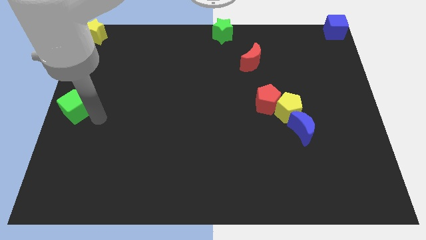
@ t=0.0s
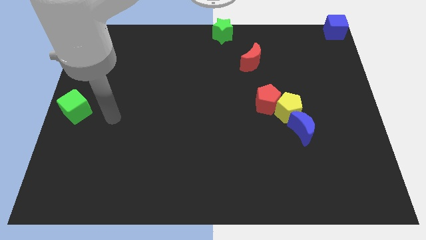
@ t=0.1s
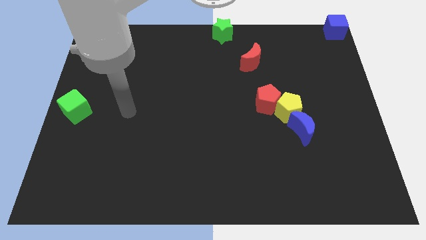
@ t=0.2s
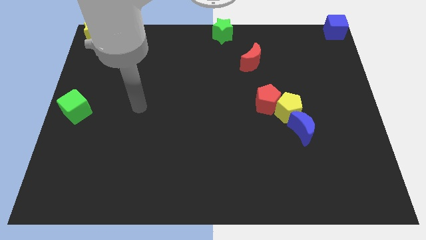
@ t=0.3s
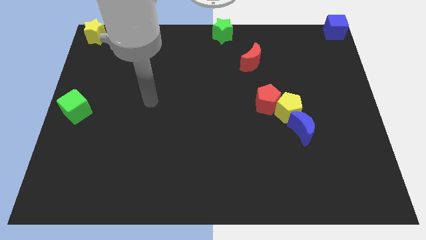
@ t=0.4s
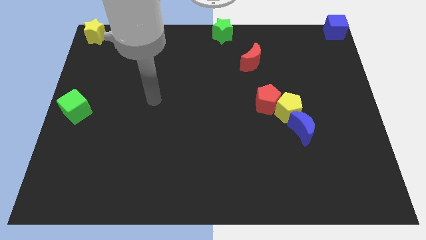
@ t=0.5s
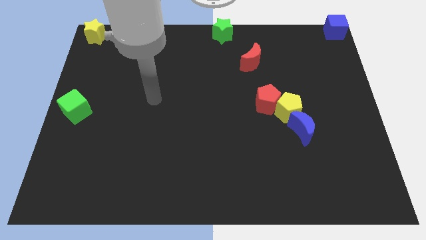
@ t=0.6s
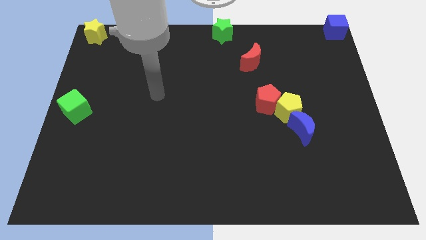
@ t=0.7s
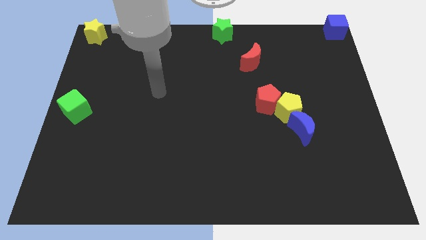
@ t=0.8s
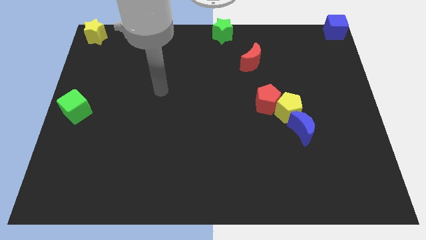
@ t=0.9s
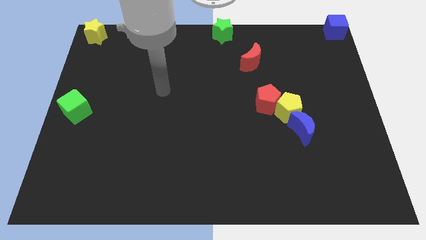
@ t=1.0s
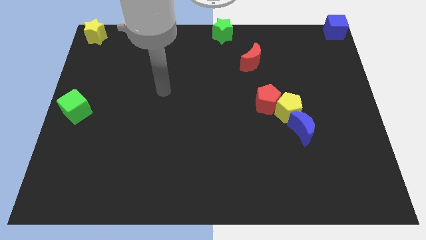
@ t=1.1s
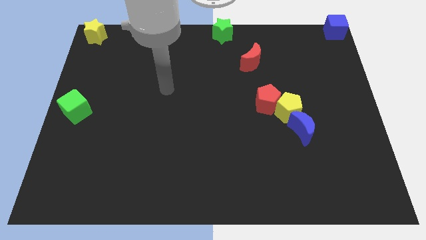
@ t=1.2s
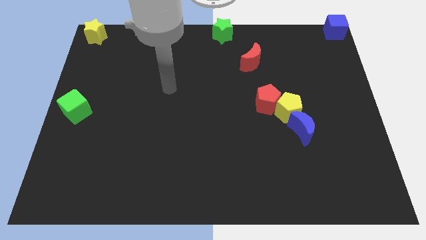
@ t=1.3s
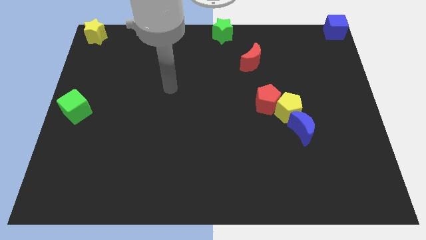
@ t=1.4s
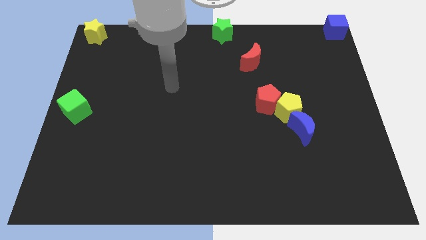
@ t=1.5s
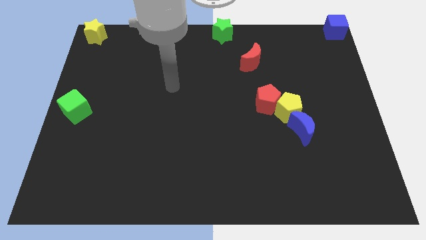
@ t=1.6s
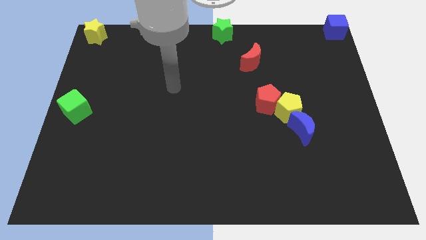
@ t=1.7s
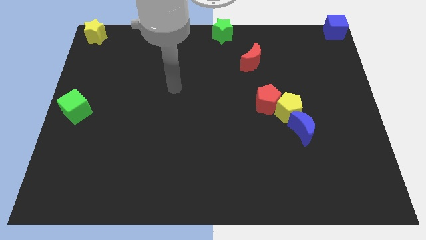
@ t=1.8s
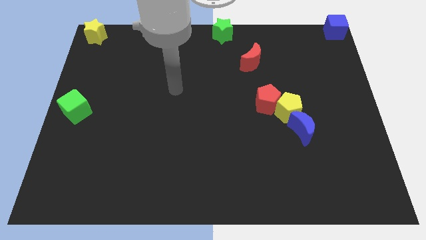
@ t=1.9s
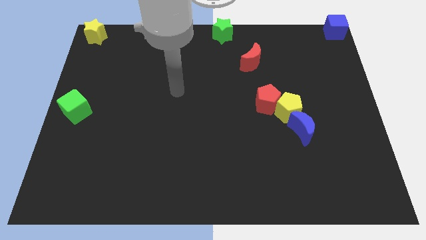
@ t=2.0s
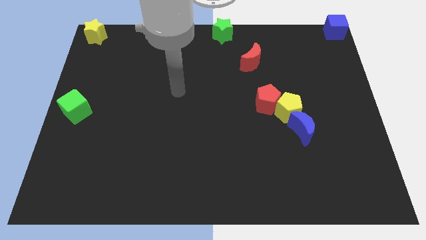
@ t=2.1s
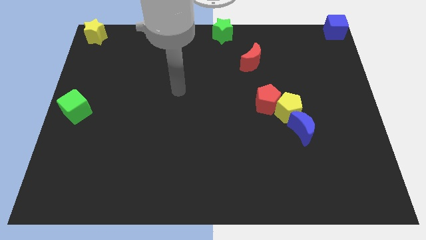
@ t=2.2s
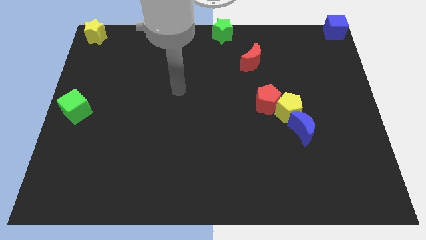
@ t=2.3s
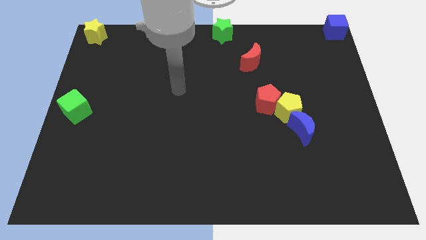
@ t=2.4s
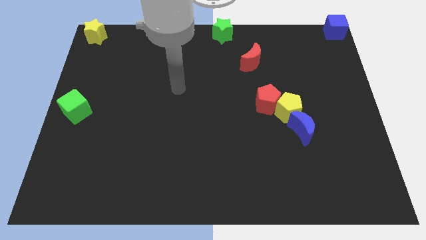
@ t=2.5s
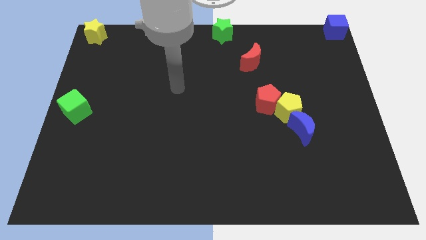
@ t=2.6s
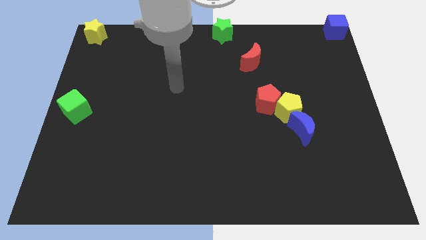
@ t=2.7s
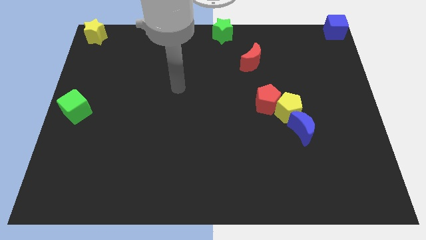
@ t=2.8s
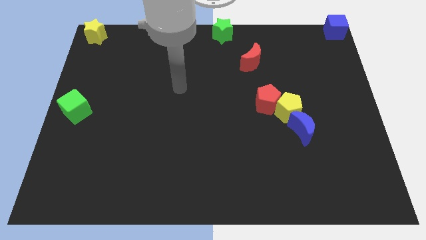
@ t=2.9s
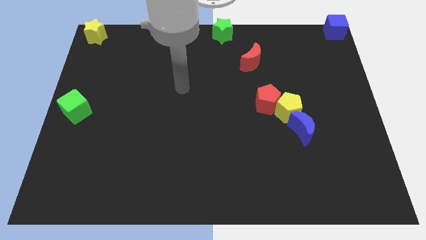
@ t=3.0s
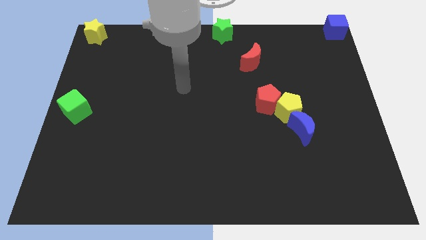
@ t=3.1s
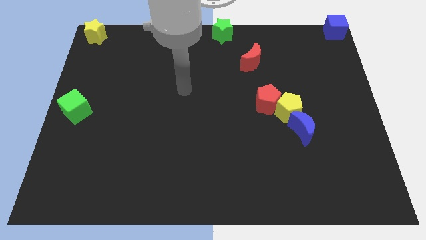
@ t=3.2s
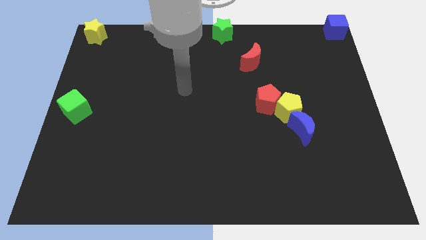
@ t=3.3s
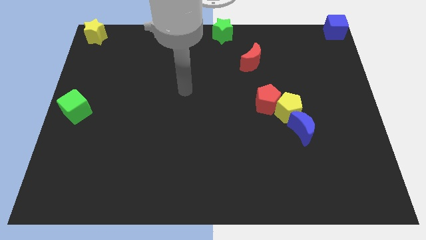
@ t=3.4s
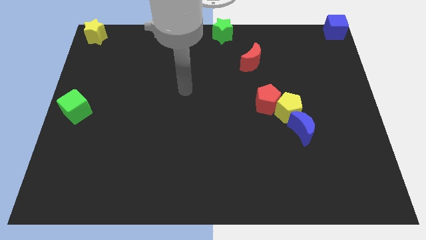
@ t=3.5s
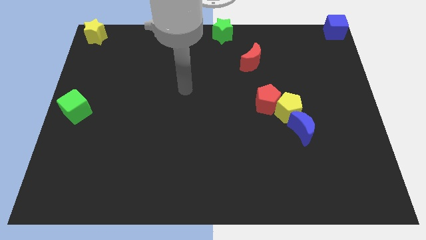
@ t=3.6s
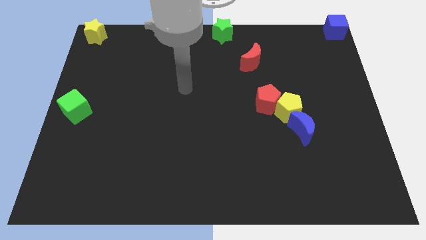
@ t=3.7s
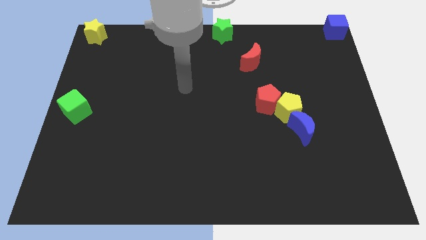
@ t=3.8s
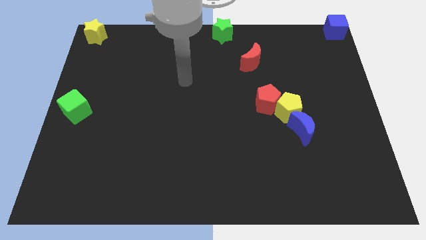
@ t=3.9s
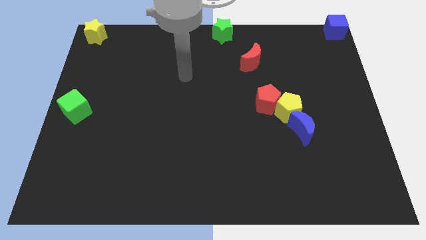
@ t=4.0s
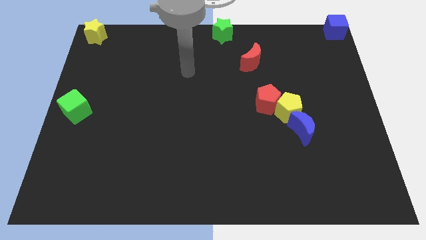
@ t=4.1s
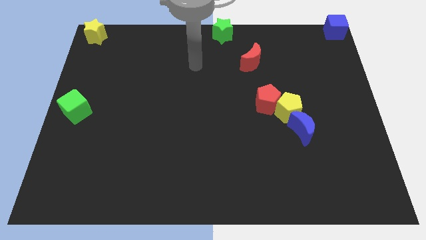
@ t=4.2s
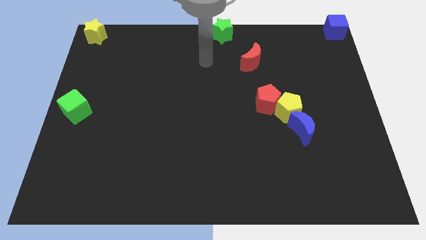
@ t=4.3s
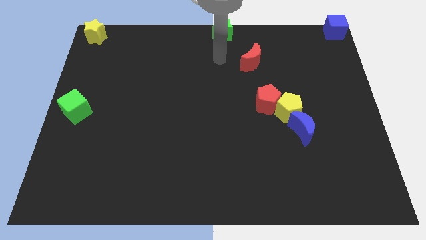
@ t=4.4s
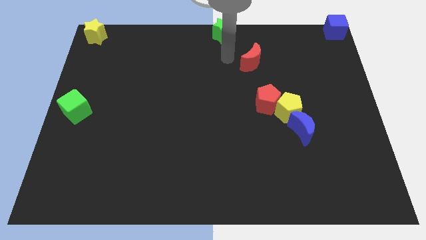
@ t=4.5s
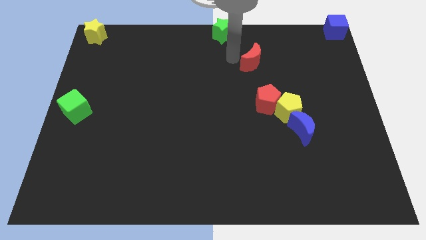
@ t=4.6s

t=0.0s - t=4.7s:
move the arm away from the green cube

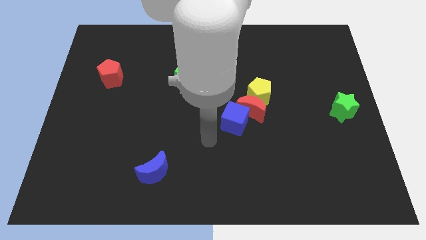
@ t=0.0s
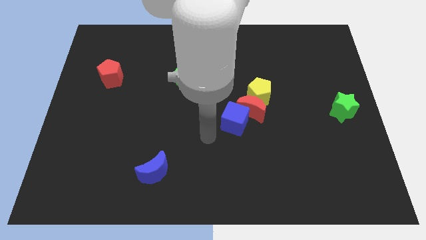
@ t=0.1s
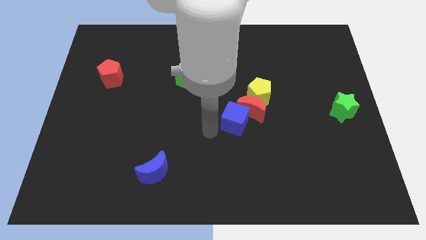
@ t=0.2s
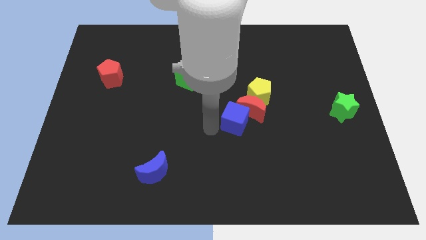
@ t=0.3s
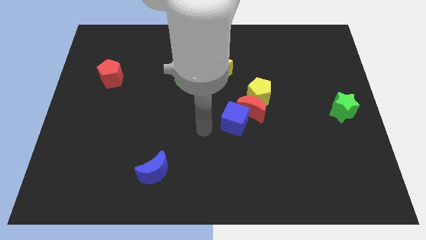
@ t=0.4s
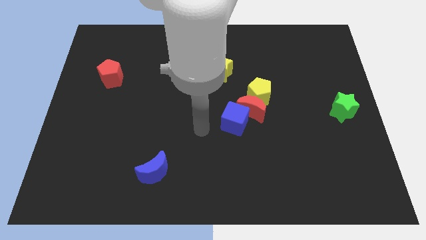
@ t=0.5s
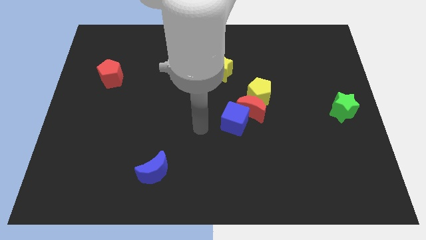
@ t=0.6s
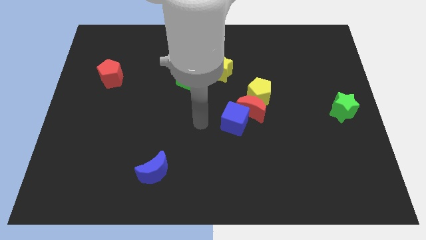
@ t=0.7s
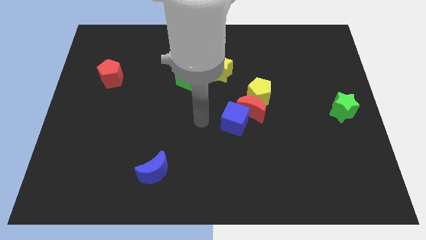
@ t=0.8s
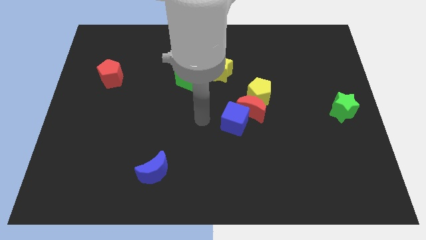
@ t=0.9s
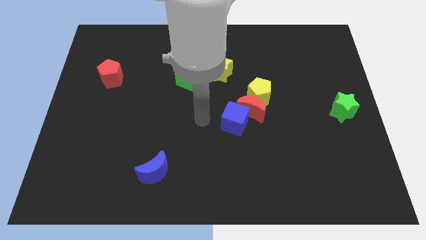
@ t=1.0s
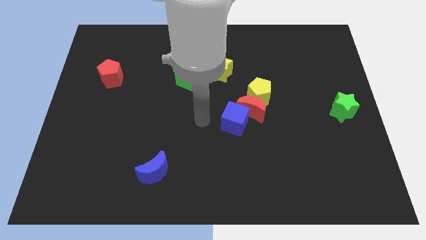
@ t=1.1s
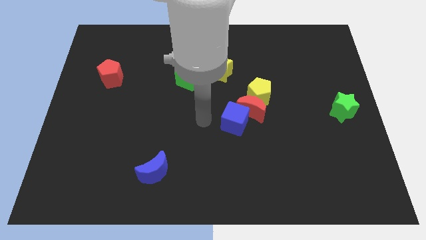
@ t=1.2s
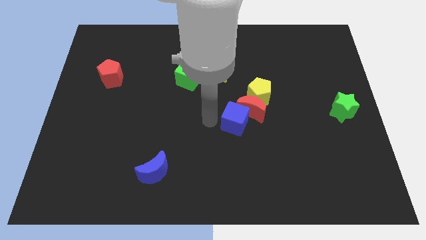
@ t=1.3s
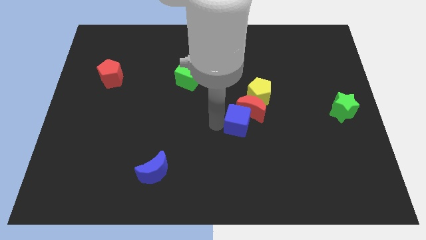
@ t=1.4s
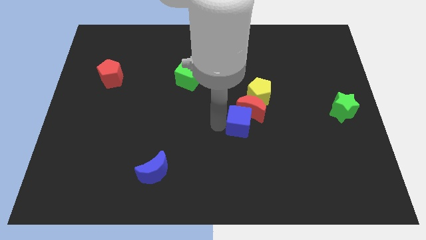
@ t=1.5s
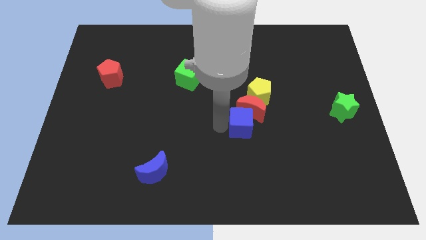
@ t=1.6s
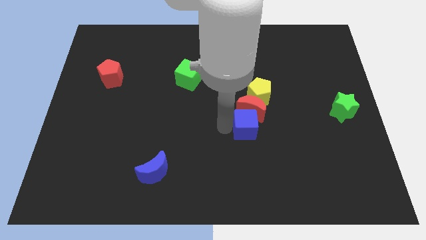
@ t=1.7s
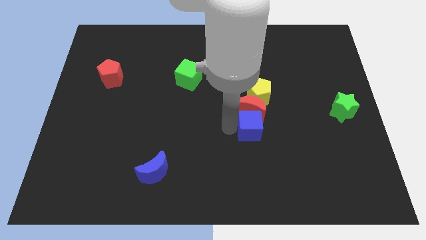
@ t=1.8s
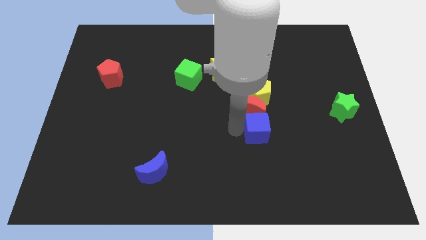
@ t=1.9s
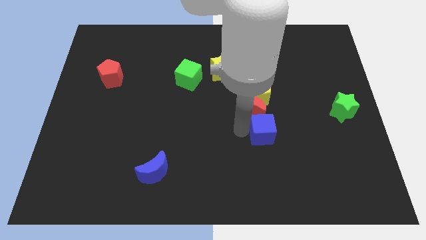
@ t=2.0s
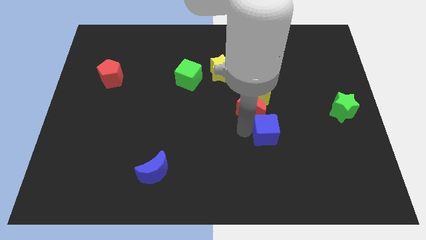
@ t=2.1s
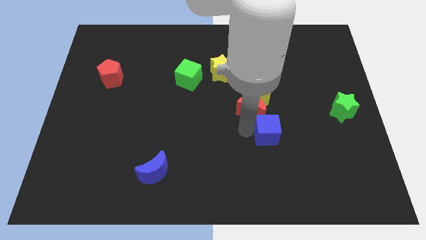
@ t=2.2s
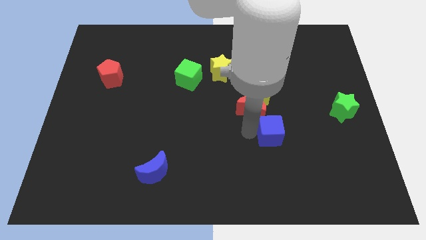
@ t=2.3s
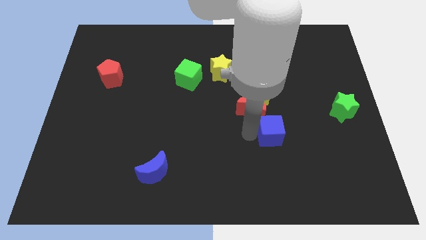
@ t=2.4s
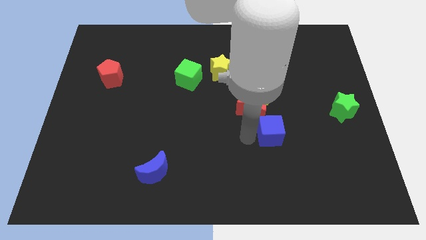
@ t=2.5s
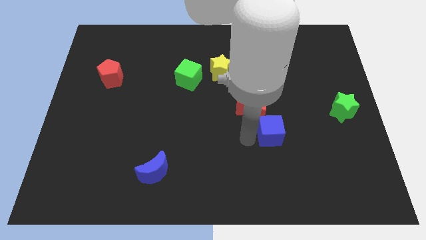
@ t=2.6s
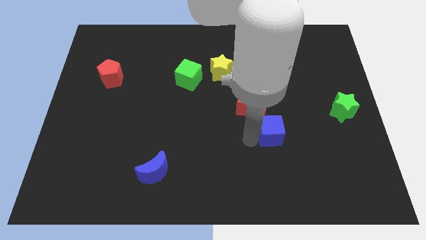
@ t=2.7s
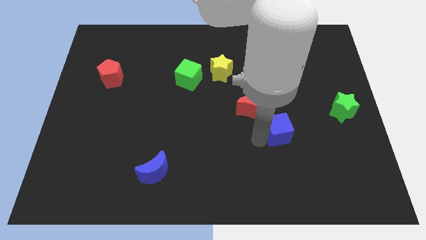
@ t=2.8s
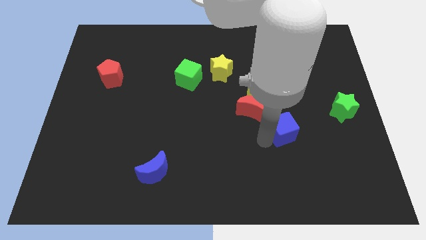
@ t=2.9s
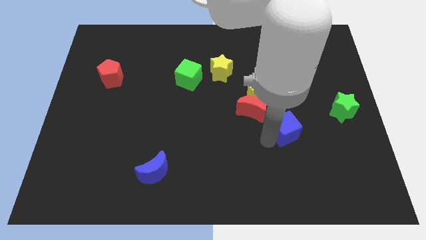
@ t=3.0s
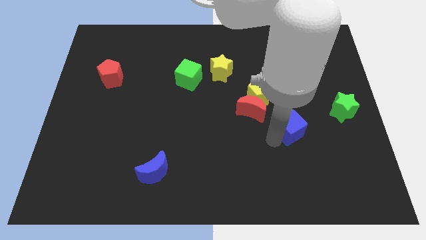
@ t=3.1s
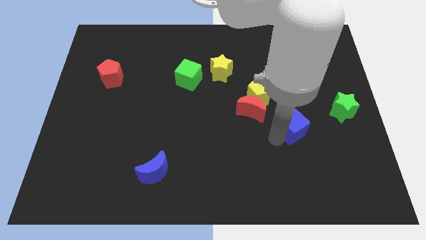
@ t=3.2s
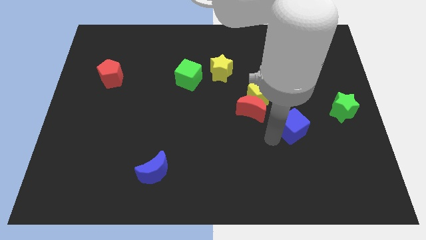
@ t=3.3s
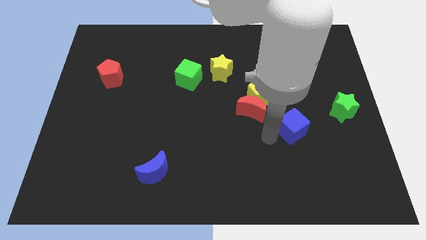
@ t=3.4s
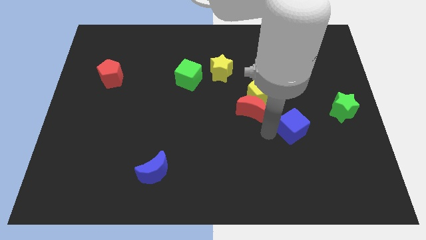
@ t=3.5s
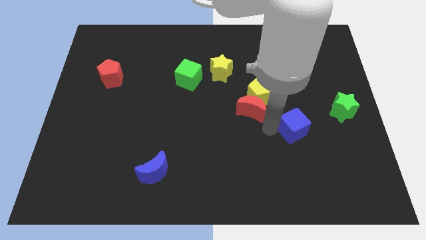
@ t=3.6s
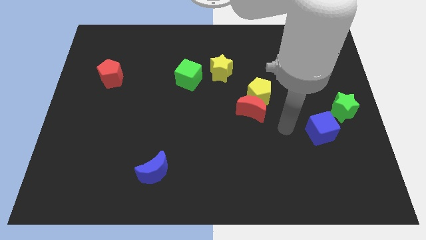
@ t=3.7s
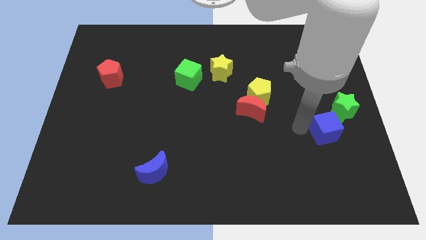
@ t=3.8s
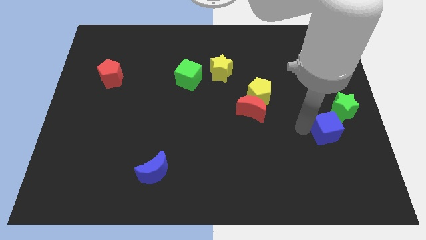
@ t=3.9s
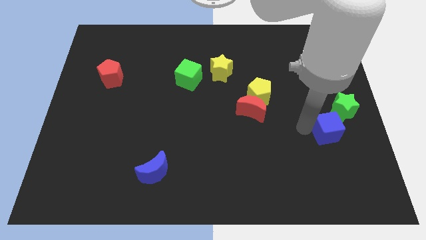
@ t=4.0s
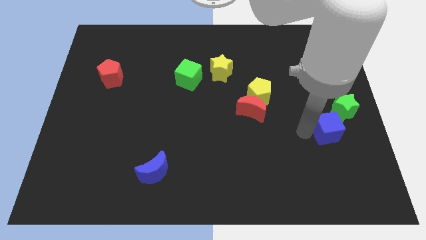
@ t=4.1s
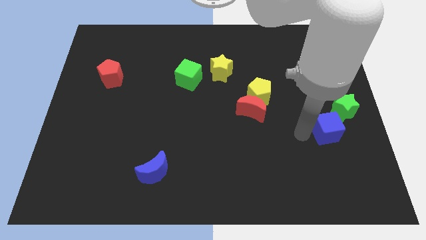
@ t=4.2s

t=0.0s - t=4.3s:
slide the blue cube close to the green star
